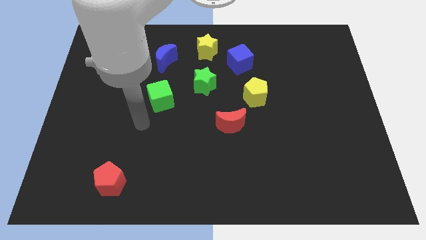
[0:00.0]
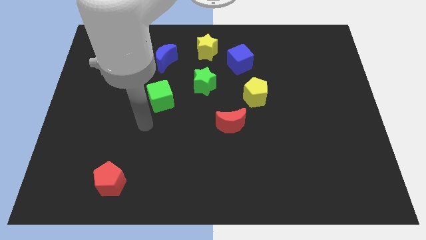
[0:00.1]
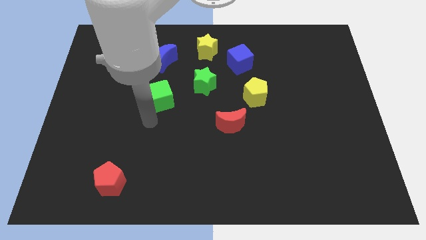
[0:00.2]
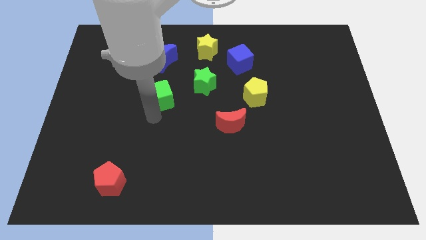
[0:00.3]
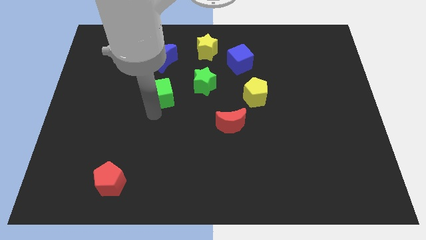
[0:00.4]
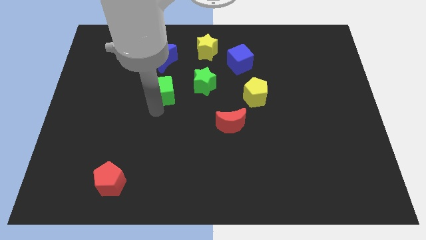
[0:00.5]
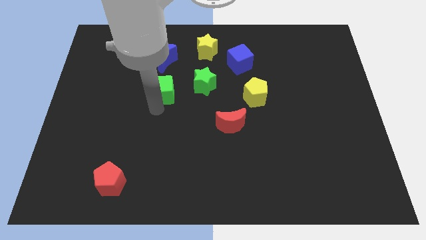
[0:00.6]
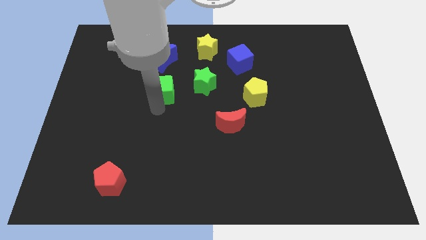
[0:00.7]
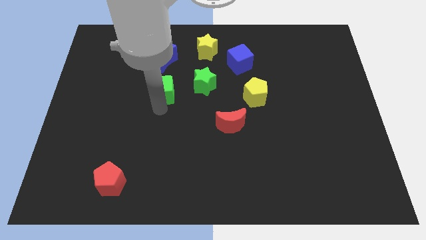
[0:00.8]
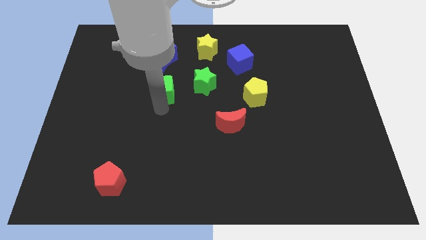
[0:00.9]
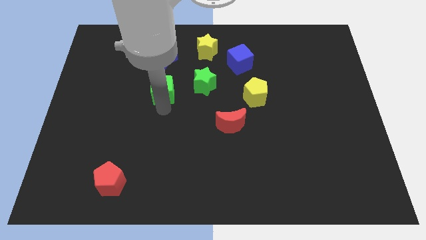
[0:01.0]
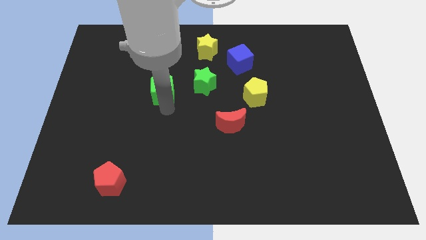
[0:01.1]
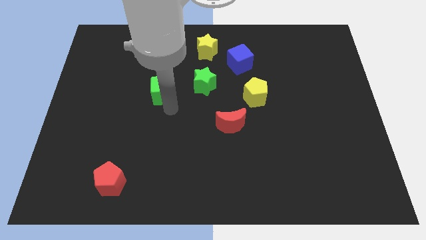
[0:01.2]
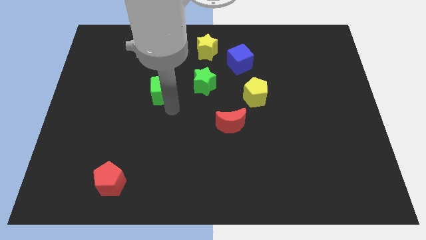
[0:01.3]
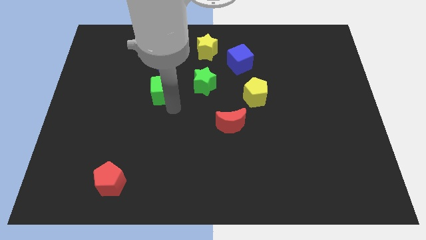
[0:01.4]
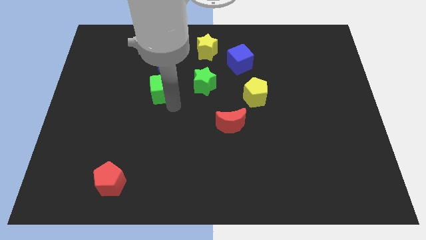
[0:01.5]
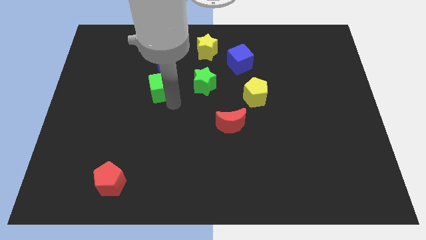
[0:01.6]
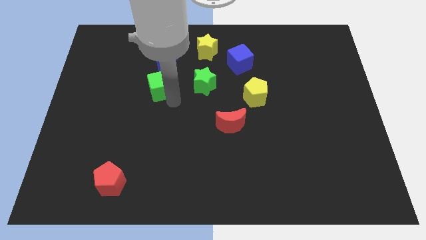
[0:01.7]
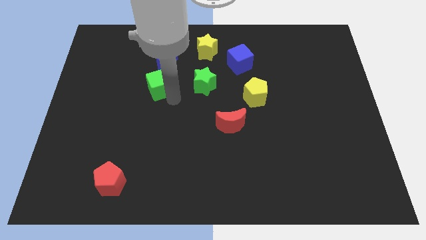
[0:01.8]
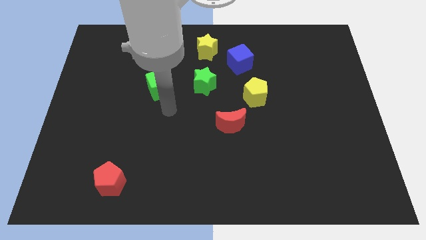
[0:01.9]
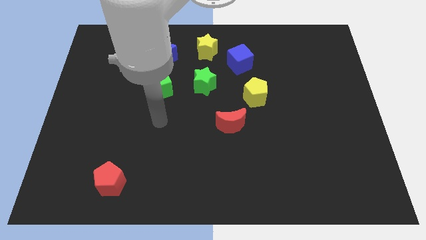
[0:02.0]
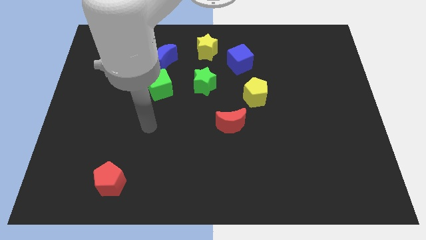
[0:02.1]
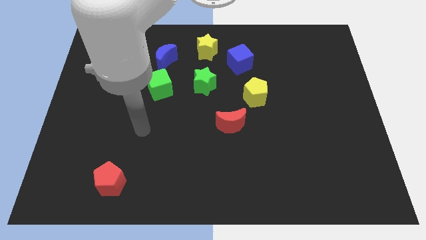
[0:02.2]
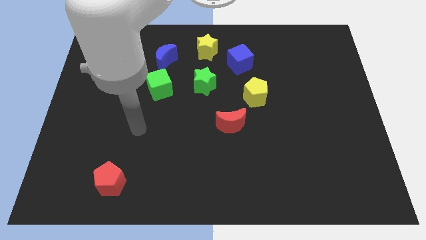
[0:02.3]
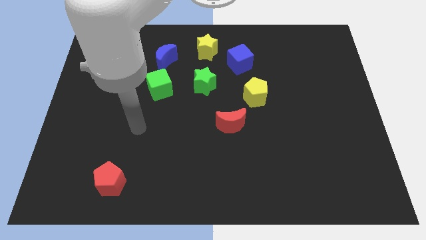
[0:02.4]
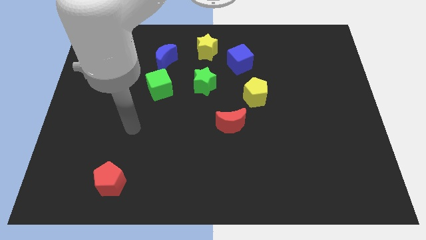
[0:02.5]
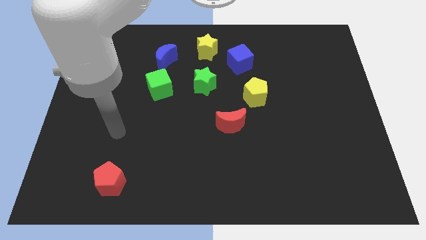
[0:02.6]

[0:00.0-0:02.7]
push green cube slightly towards blue crescent

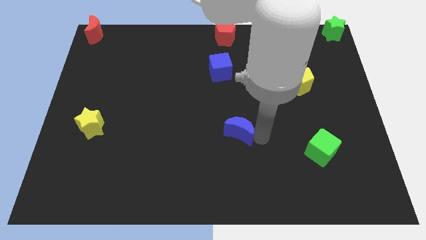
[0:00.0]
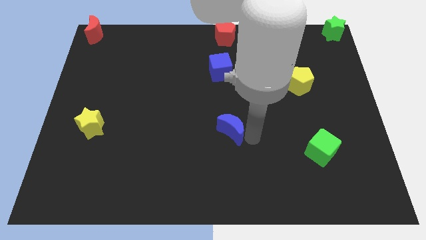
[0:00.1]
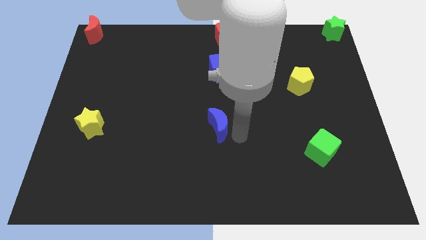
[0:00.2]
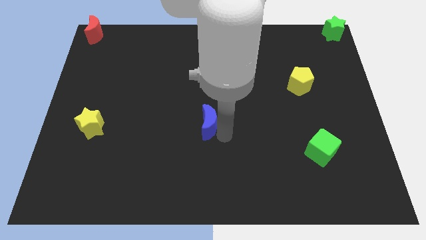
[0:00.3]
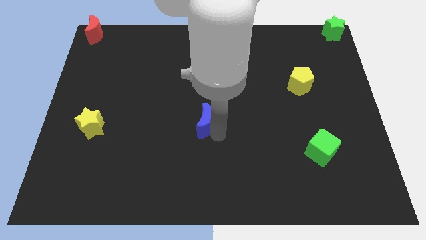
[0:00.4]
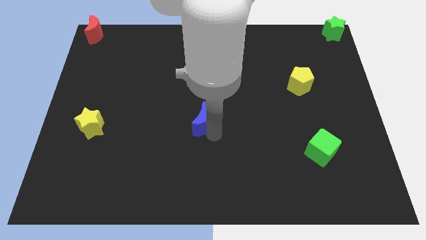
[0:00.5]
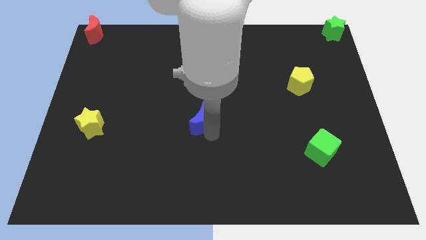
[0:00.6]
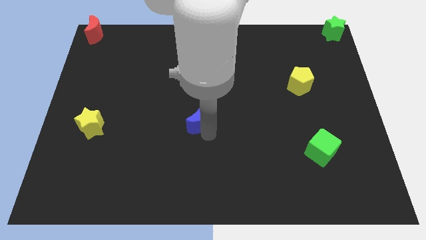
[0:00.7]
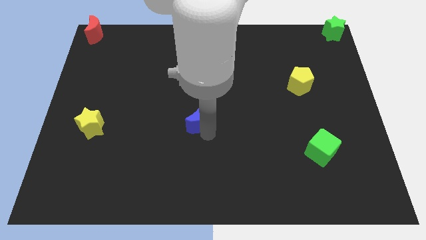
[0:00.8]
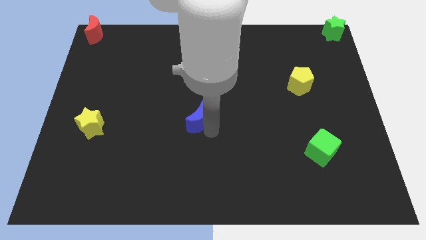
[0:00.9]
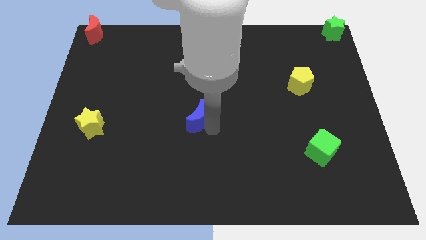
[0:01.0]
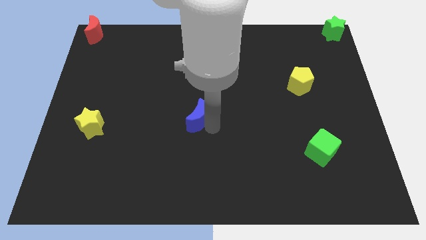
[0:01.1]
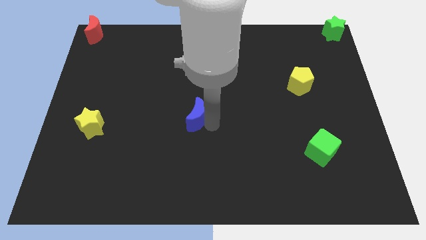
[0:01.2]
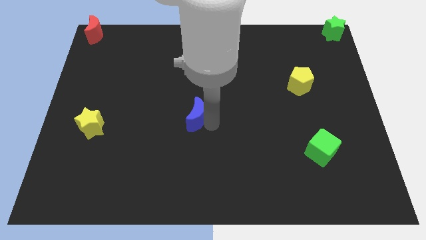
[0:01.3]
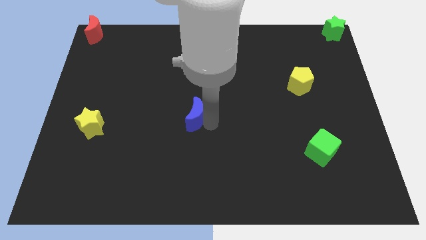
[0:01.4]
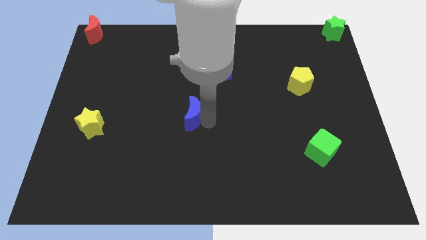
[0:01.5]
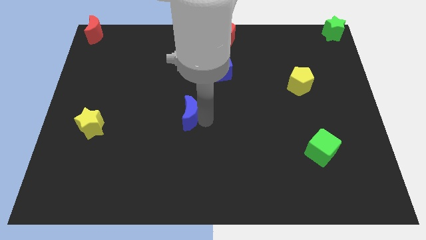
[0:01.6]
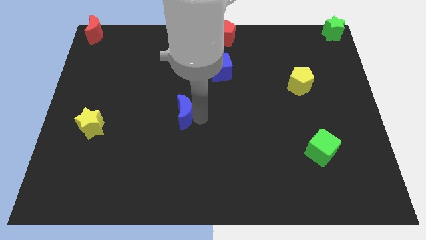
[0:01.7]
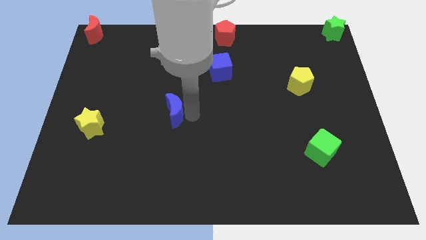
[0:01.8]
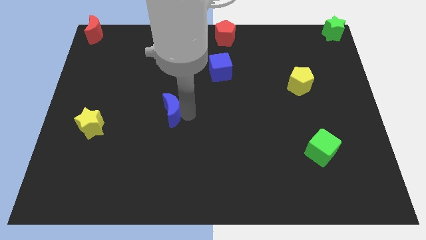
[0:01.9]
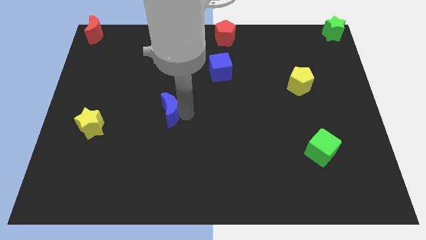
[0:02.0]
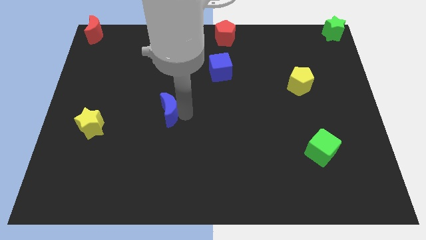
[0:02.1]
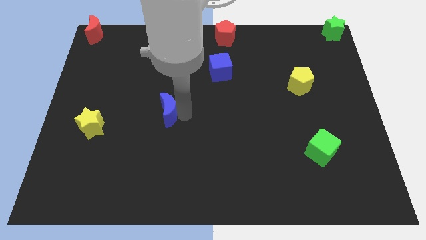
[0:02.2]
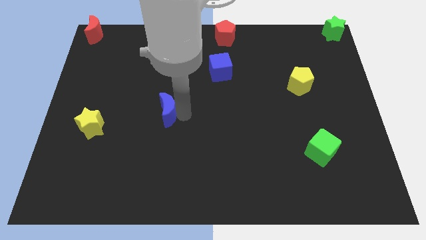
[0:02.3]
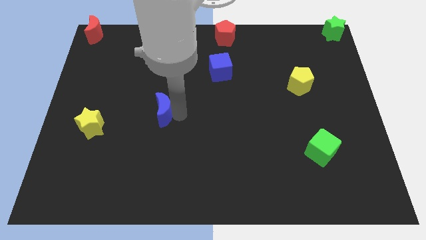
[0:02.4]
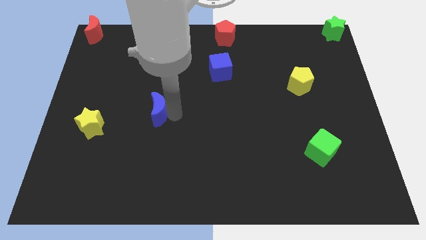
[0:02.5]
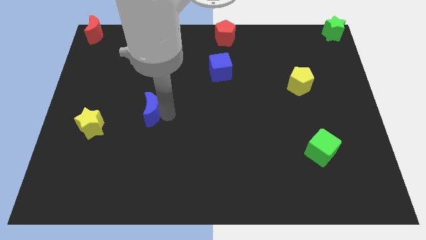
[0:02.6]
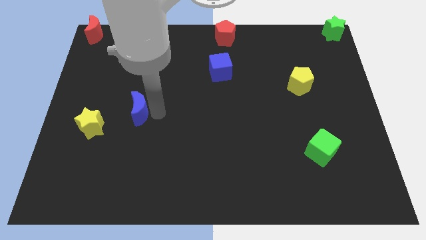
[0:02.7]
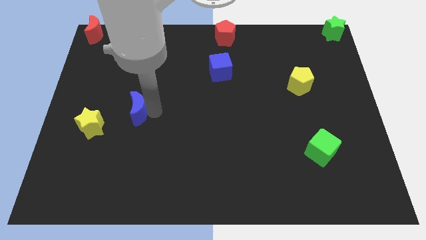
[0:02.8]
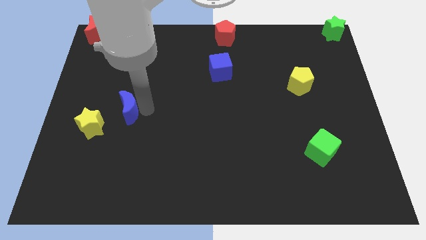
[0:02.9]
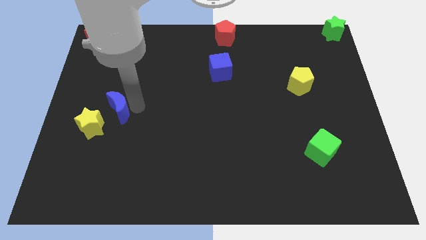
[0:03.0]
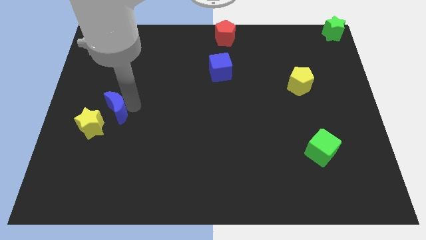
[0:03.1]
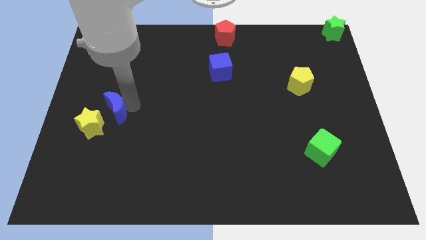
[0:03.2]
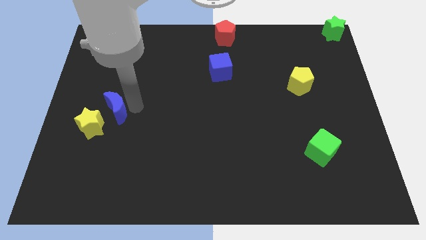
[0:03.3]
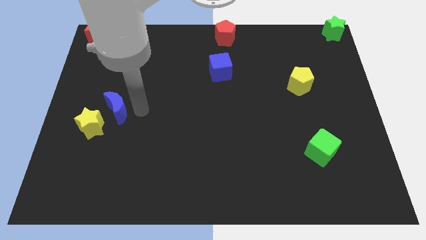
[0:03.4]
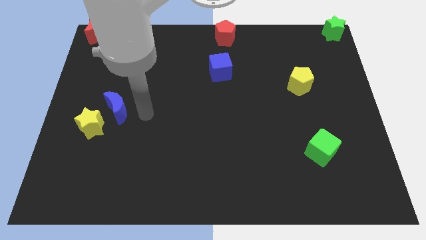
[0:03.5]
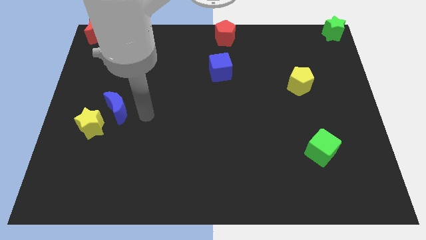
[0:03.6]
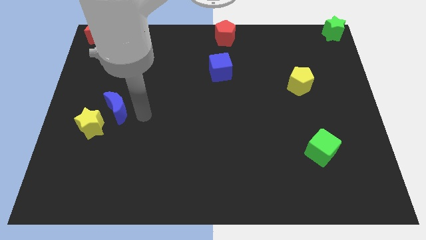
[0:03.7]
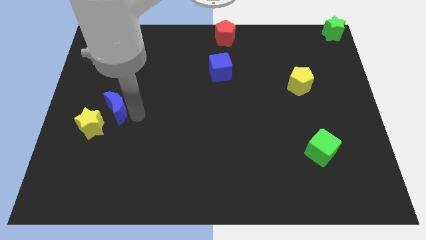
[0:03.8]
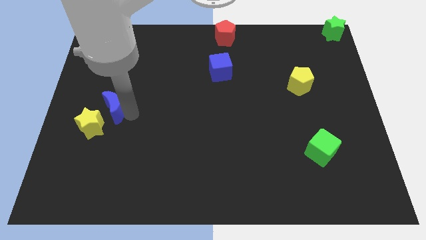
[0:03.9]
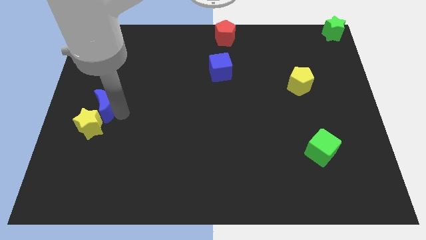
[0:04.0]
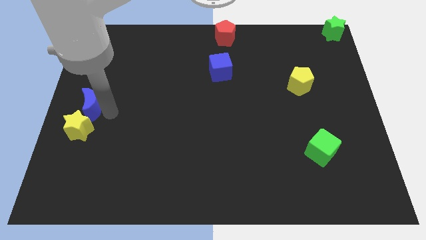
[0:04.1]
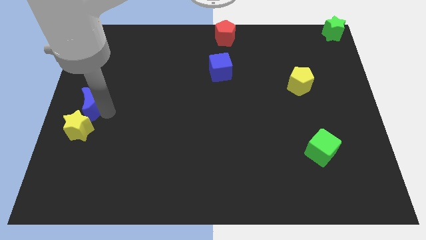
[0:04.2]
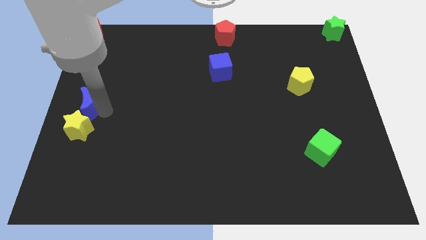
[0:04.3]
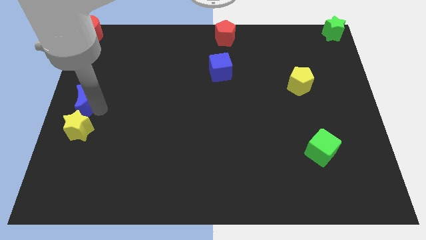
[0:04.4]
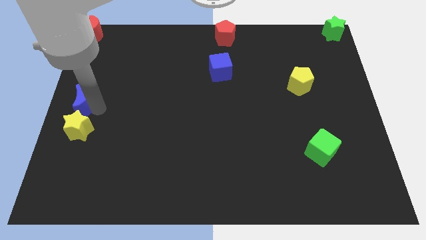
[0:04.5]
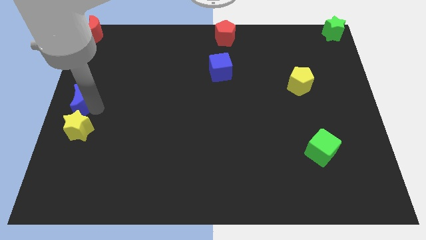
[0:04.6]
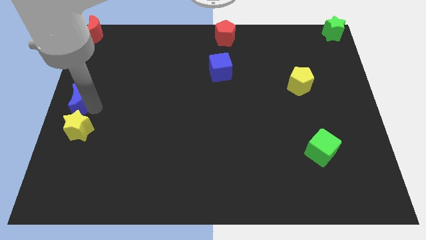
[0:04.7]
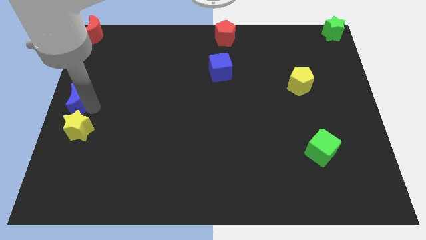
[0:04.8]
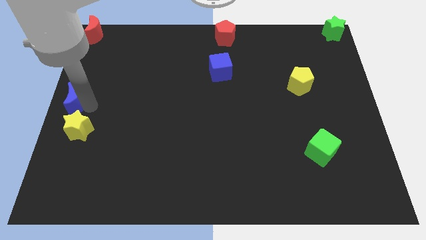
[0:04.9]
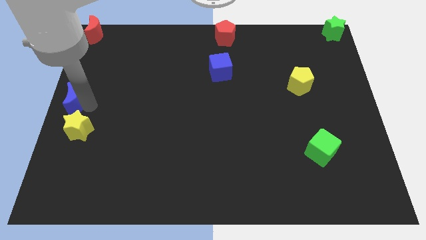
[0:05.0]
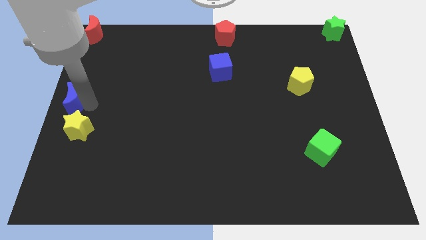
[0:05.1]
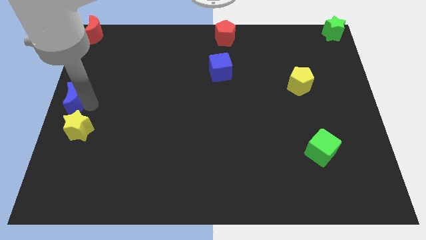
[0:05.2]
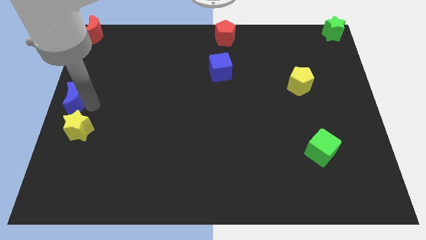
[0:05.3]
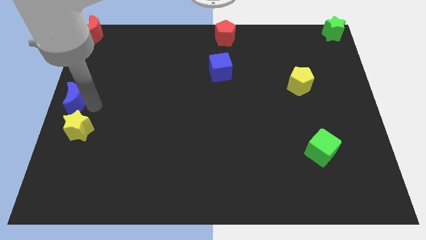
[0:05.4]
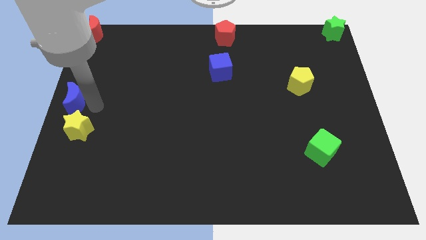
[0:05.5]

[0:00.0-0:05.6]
move the blue crescent to the left center

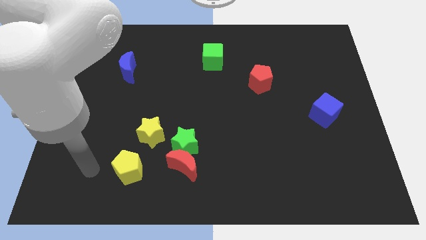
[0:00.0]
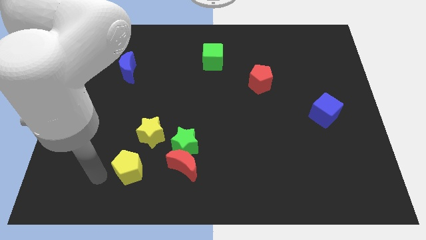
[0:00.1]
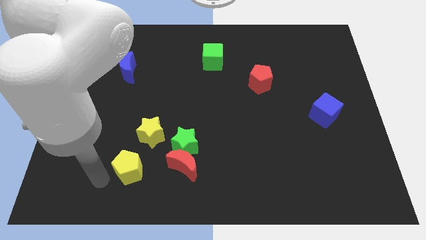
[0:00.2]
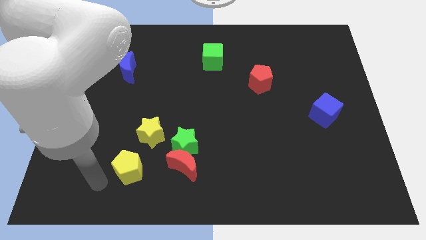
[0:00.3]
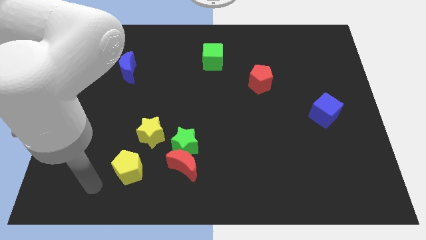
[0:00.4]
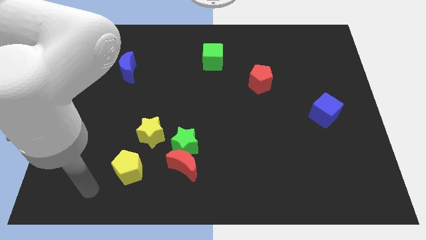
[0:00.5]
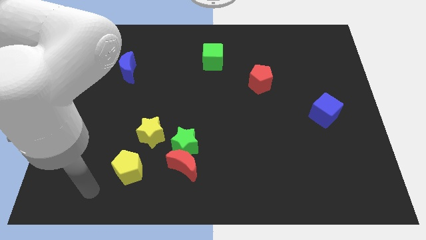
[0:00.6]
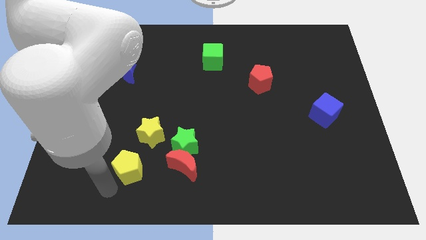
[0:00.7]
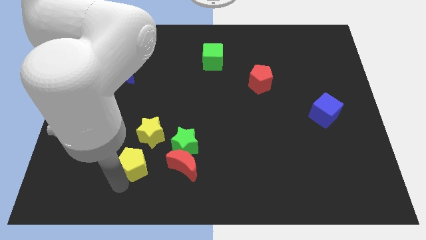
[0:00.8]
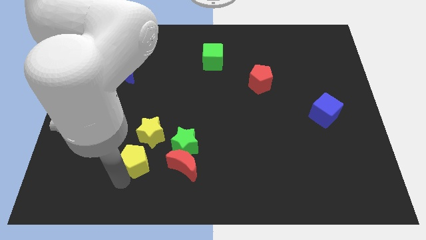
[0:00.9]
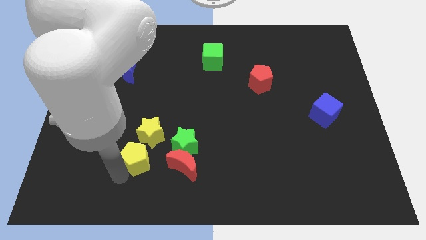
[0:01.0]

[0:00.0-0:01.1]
move yellow pentagon towards yellow star
